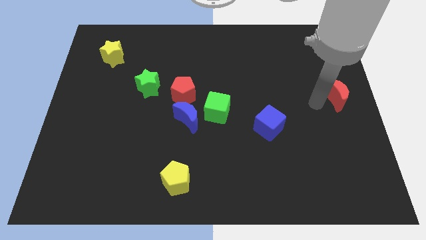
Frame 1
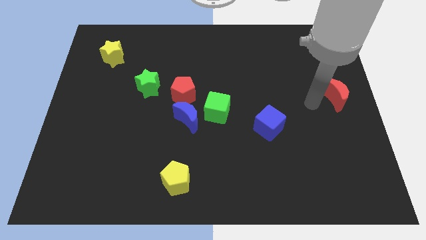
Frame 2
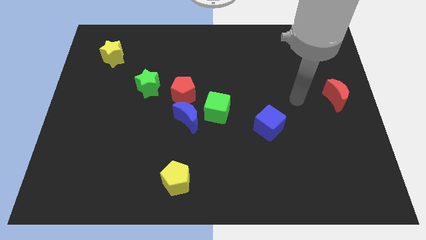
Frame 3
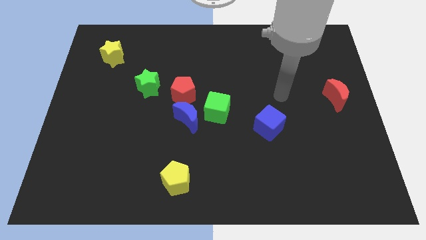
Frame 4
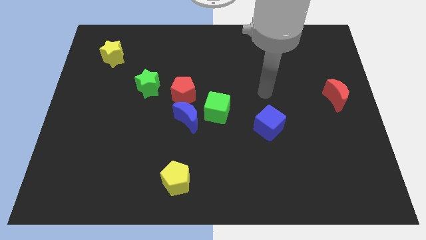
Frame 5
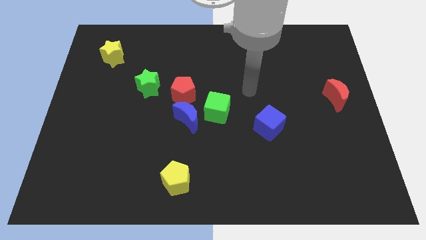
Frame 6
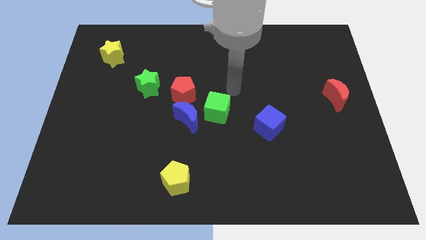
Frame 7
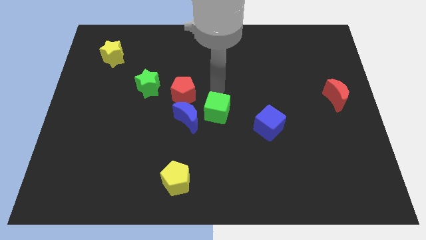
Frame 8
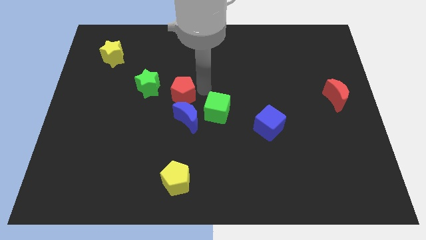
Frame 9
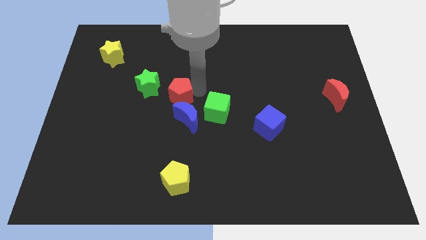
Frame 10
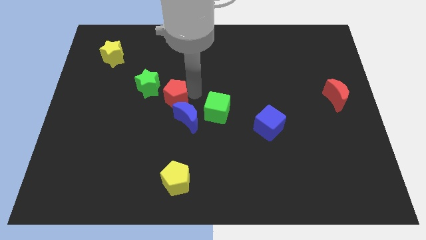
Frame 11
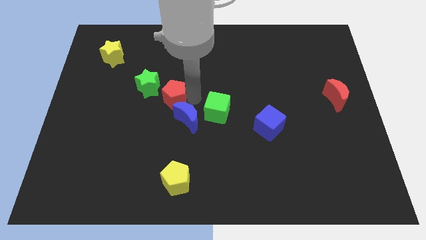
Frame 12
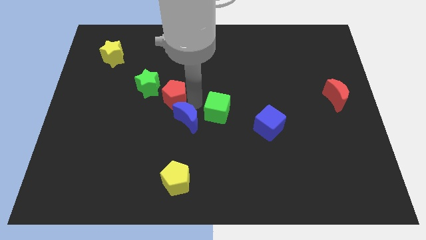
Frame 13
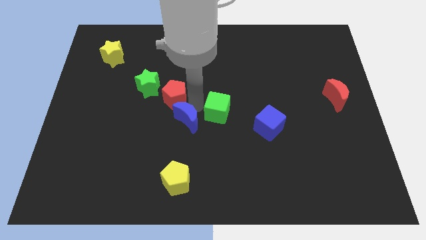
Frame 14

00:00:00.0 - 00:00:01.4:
move the red pentagon down slightly

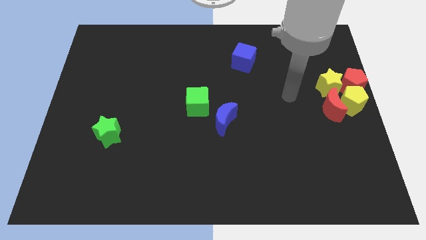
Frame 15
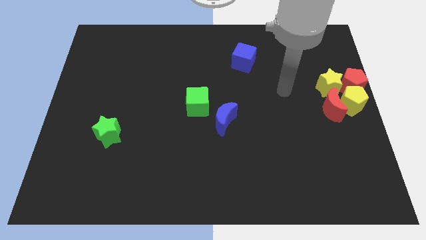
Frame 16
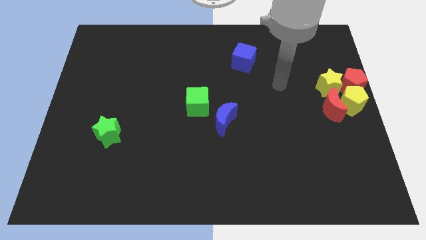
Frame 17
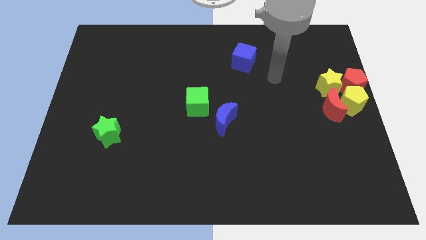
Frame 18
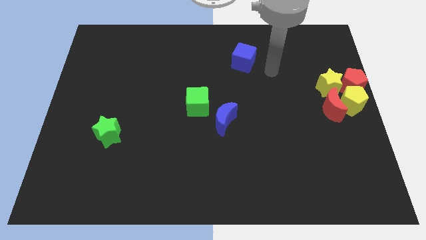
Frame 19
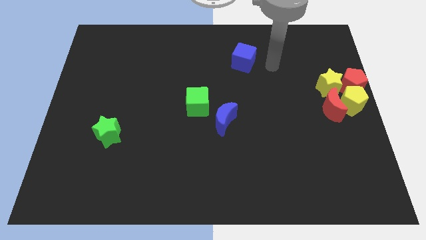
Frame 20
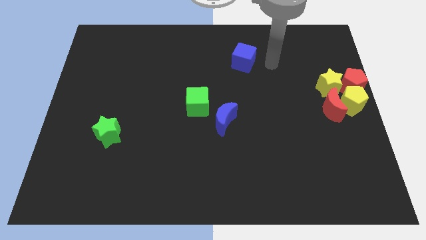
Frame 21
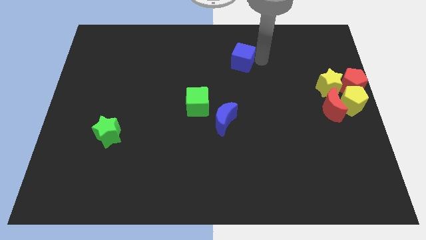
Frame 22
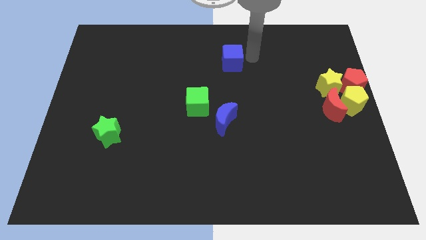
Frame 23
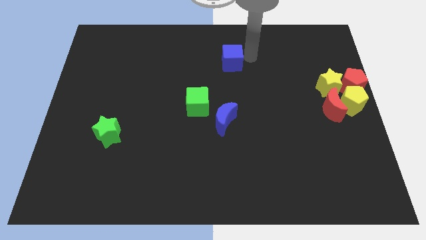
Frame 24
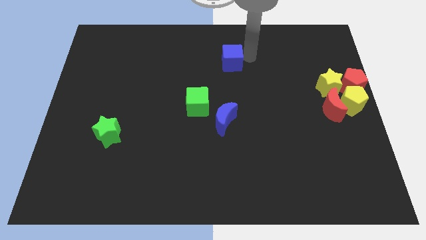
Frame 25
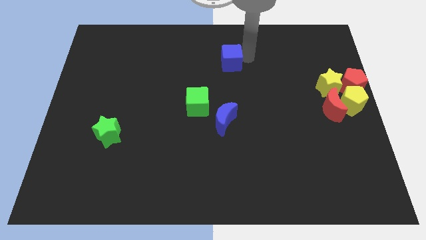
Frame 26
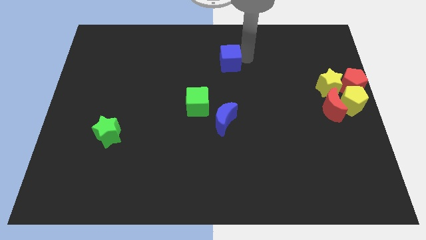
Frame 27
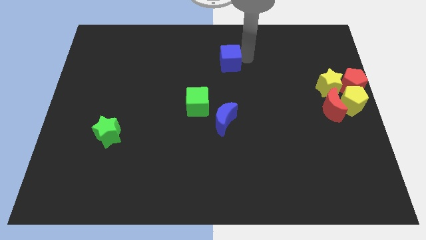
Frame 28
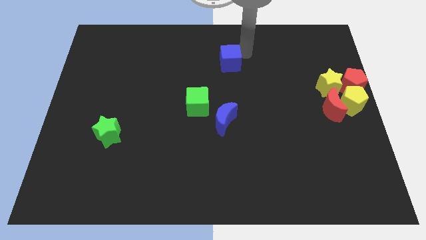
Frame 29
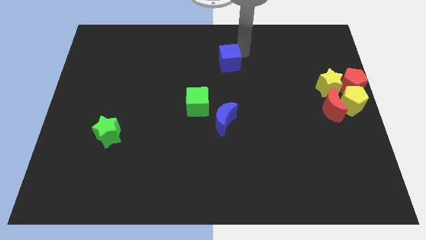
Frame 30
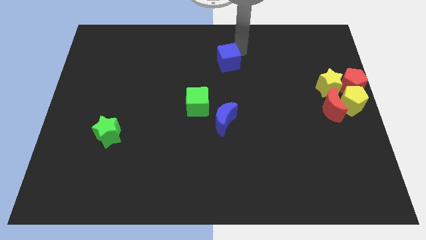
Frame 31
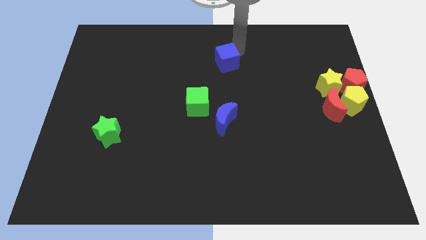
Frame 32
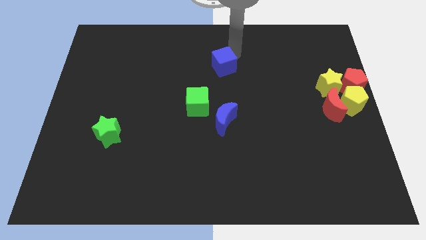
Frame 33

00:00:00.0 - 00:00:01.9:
move the blue cube vertically to the top side of the blue moon

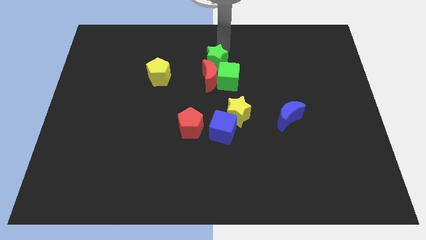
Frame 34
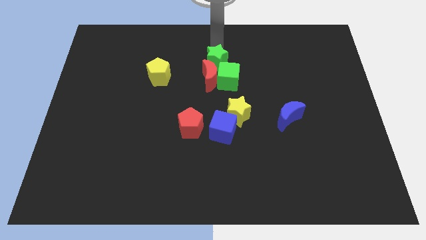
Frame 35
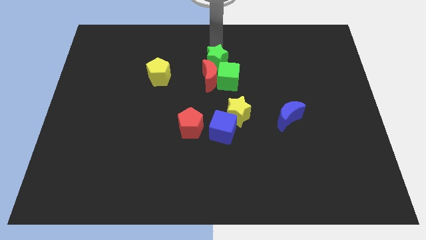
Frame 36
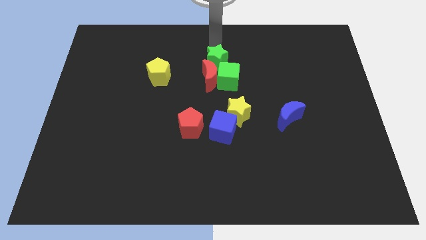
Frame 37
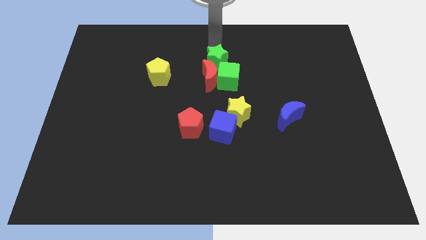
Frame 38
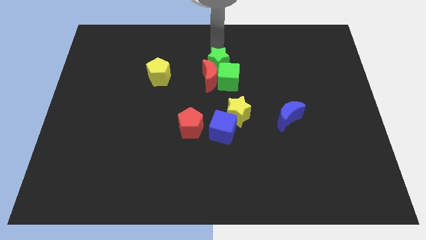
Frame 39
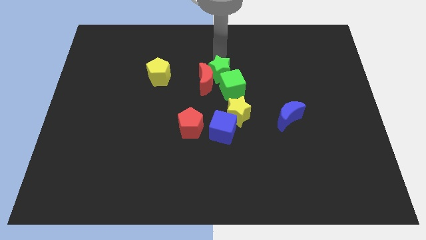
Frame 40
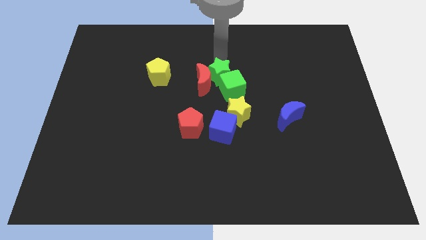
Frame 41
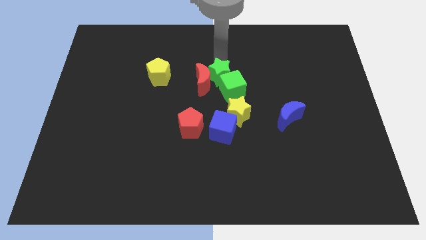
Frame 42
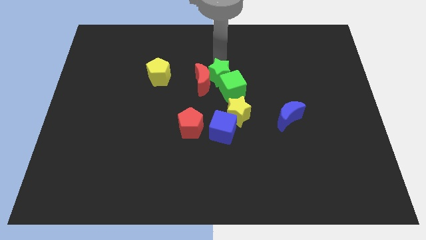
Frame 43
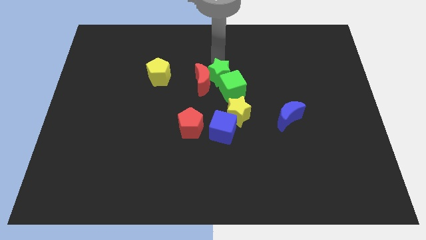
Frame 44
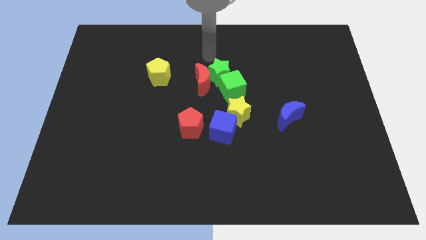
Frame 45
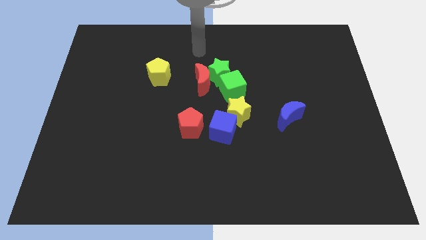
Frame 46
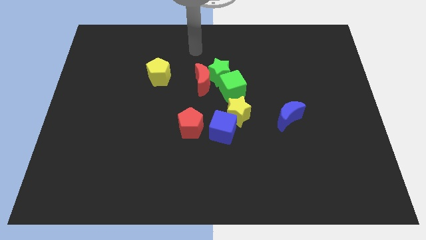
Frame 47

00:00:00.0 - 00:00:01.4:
place green star in between the green cube and red moon

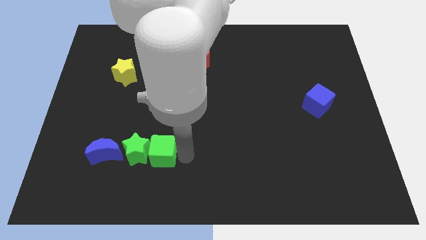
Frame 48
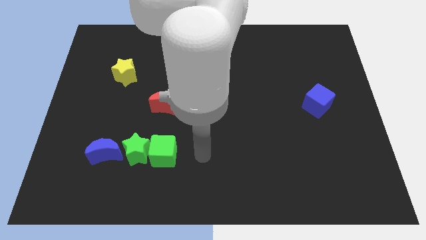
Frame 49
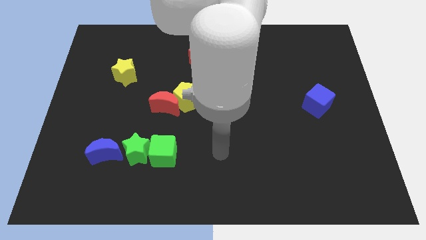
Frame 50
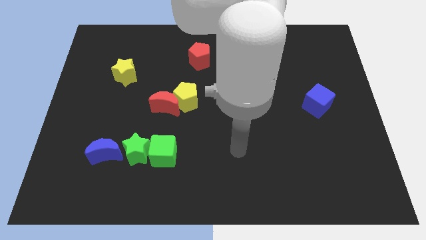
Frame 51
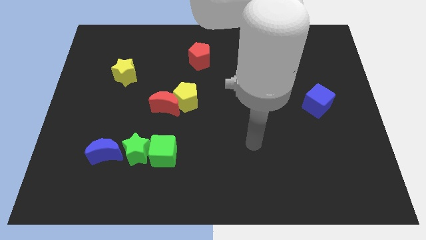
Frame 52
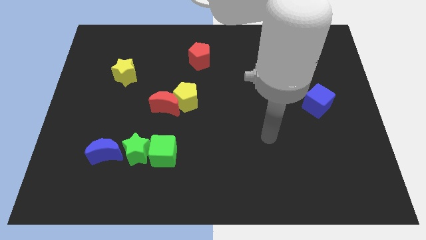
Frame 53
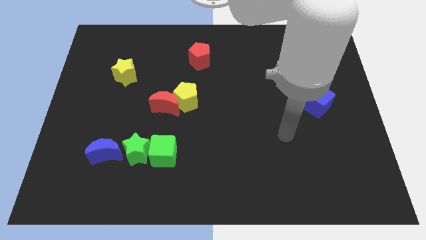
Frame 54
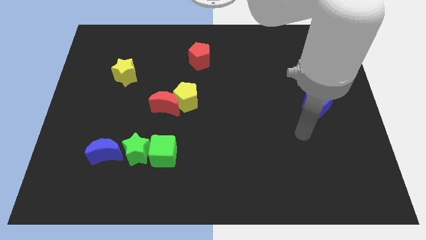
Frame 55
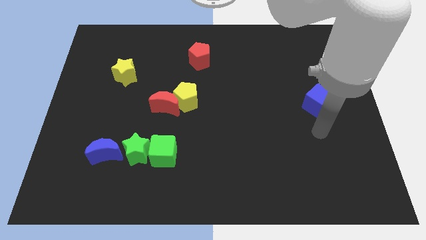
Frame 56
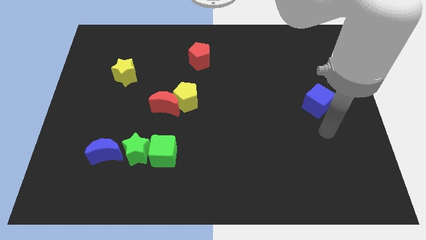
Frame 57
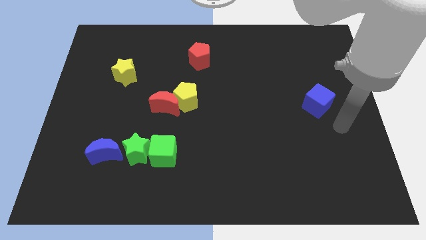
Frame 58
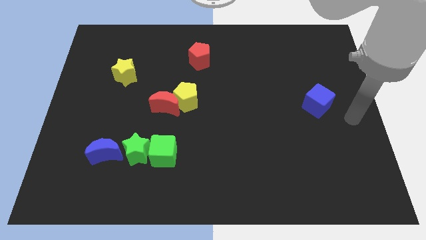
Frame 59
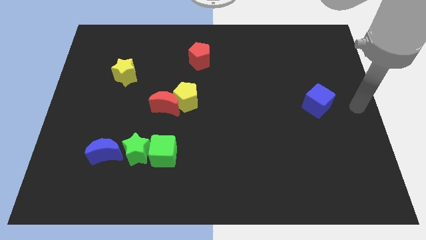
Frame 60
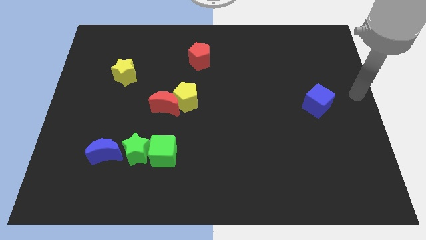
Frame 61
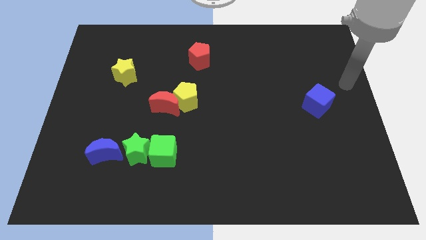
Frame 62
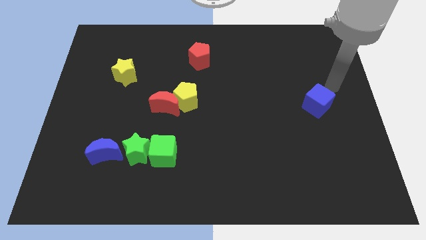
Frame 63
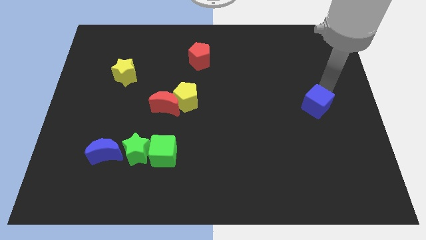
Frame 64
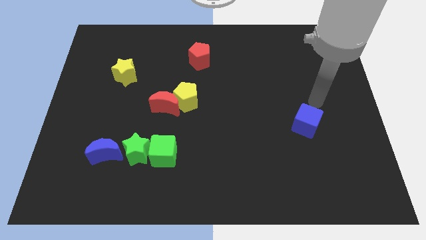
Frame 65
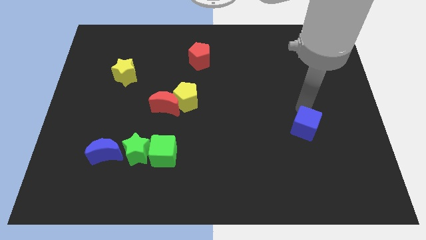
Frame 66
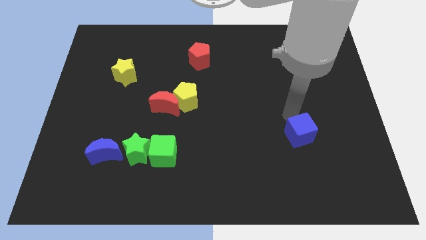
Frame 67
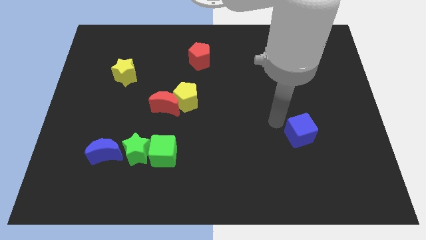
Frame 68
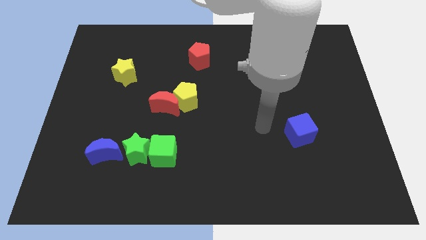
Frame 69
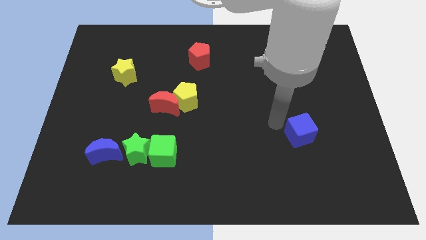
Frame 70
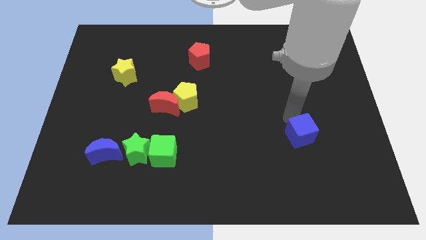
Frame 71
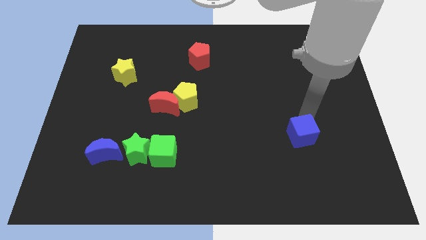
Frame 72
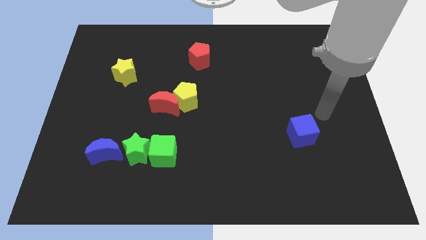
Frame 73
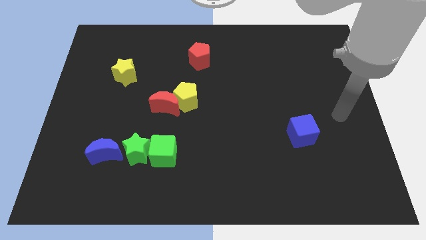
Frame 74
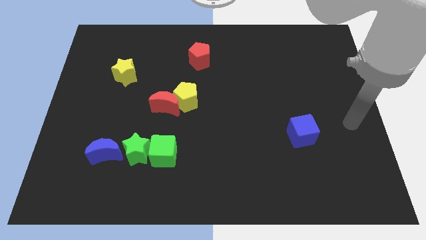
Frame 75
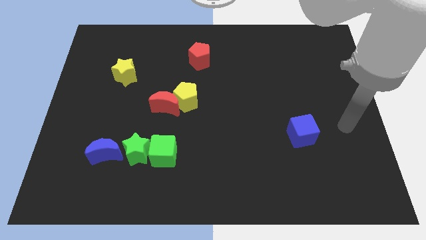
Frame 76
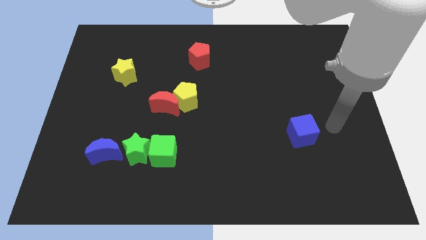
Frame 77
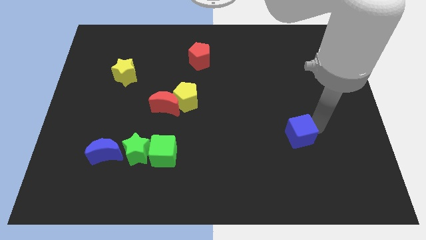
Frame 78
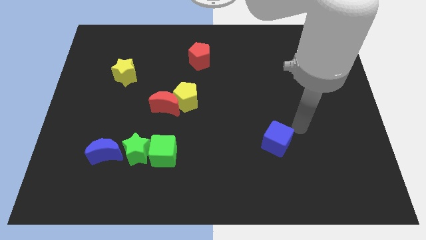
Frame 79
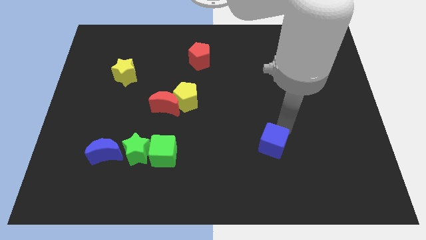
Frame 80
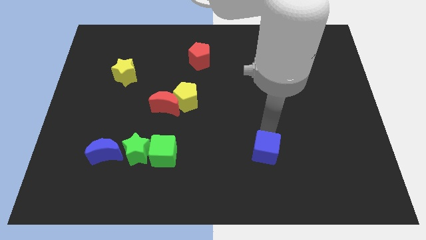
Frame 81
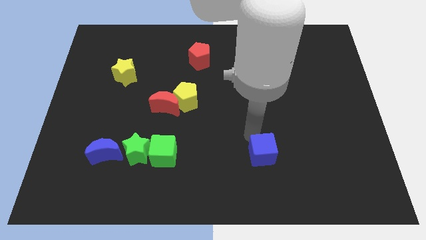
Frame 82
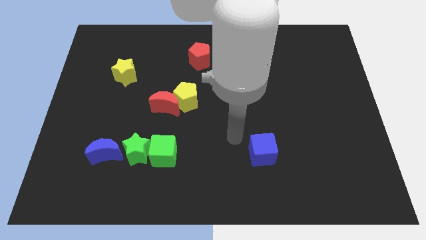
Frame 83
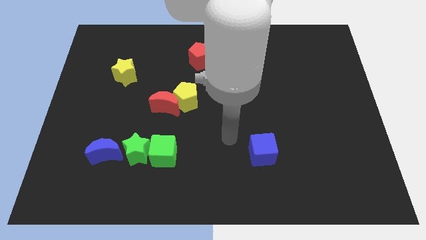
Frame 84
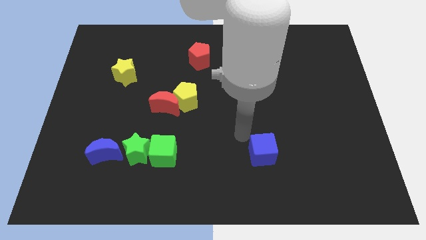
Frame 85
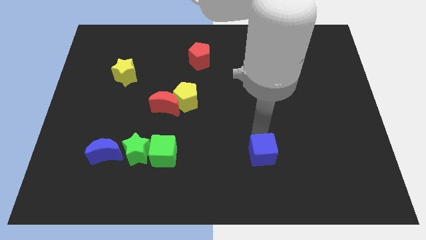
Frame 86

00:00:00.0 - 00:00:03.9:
move your arm towards the blue cube on right center of the board

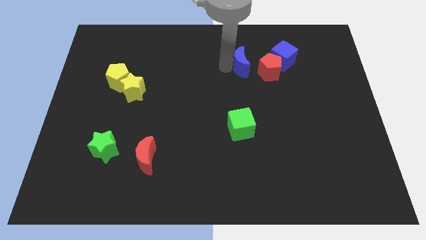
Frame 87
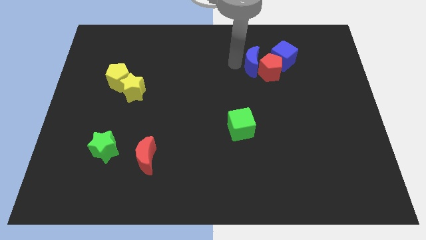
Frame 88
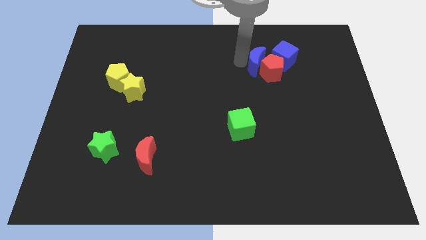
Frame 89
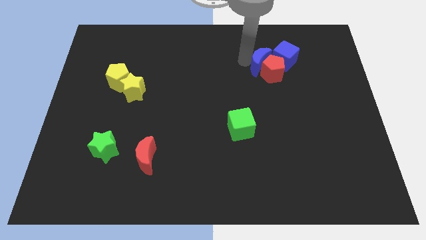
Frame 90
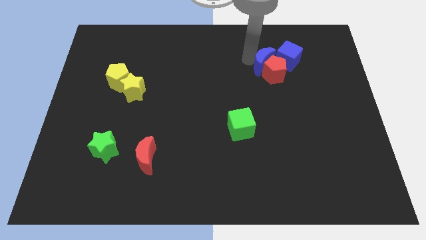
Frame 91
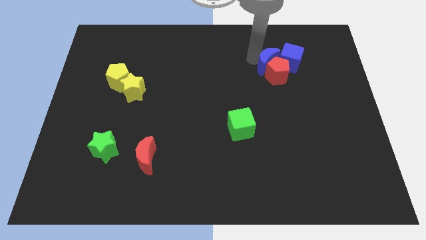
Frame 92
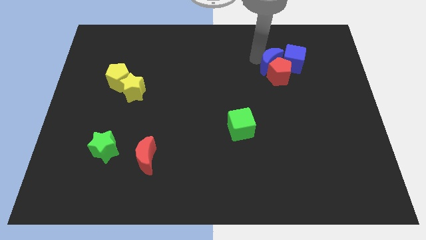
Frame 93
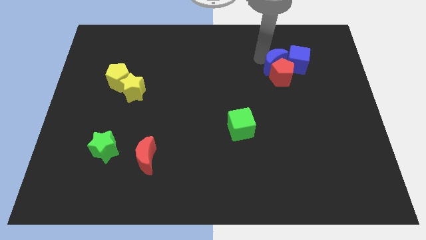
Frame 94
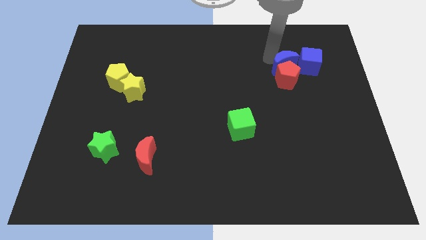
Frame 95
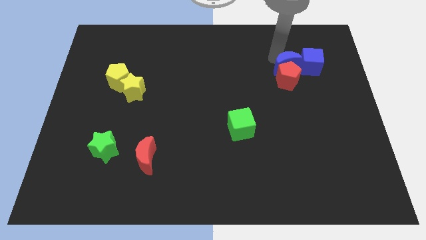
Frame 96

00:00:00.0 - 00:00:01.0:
push the blue crescent to the top of the red pentagon
